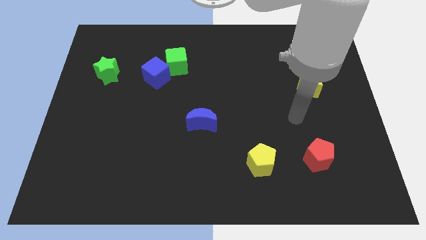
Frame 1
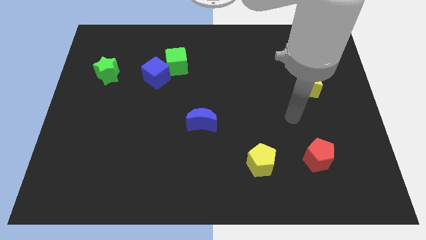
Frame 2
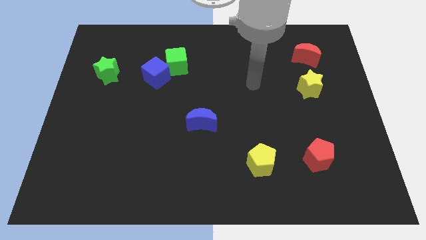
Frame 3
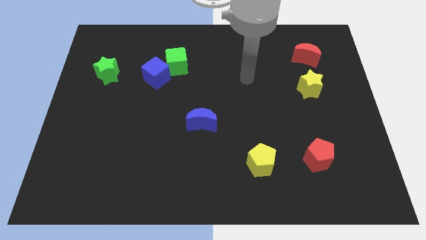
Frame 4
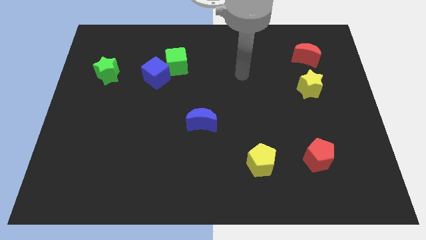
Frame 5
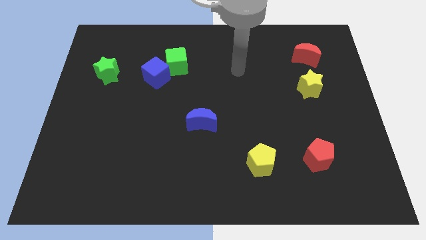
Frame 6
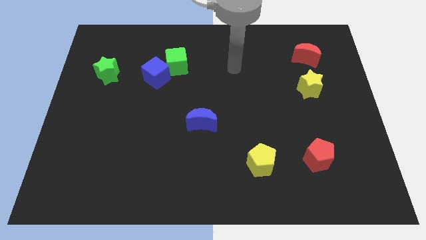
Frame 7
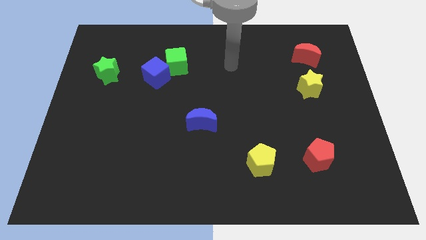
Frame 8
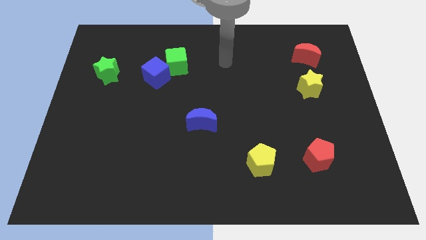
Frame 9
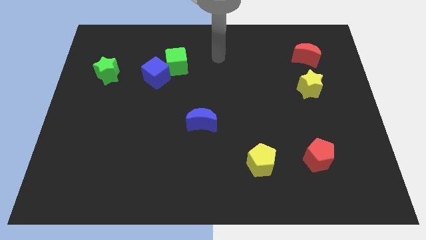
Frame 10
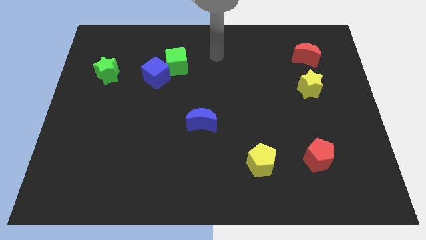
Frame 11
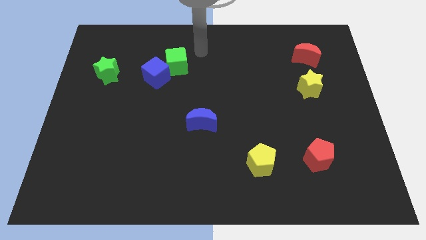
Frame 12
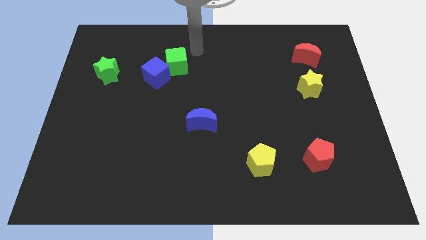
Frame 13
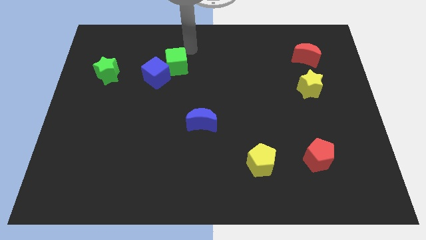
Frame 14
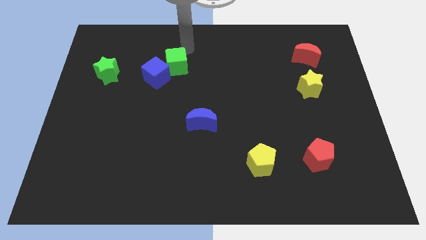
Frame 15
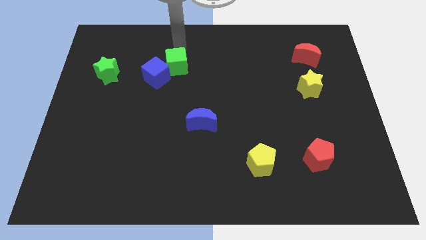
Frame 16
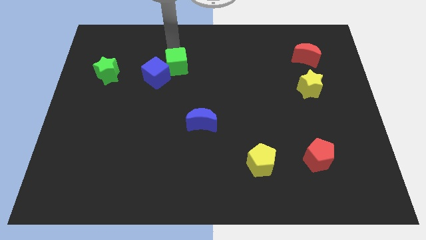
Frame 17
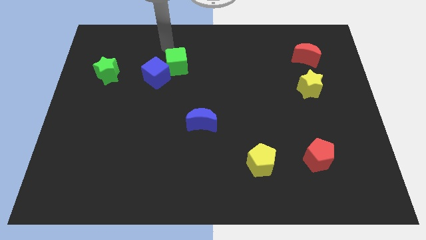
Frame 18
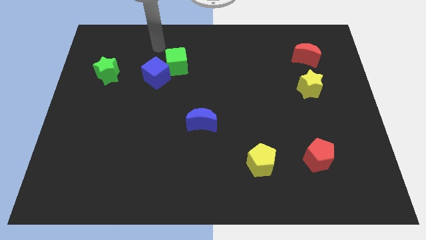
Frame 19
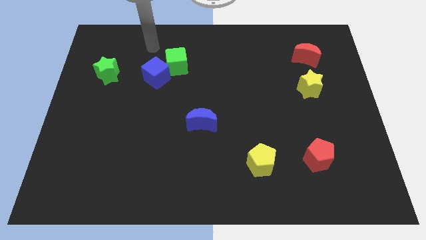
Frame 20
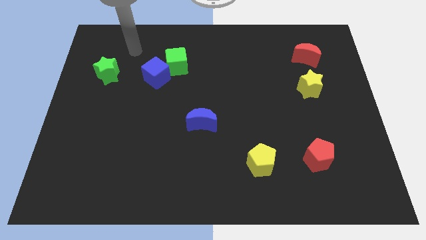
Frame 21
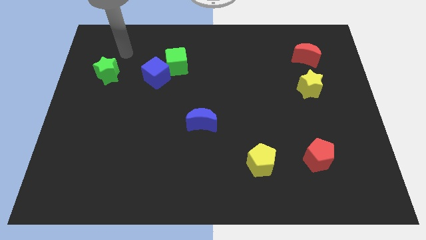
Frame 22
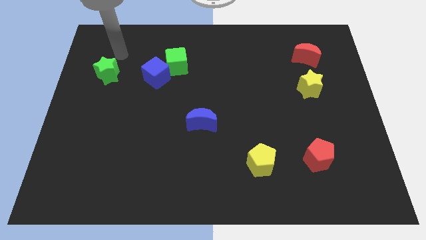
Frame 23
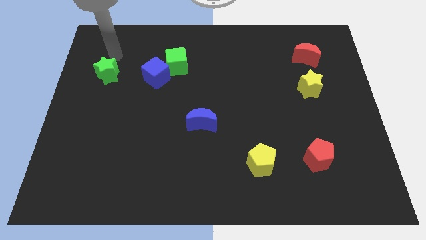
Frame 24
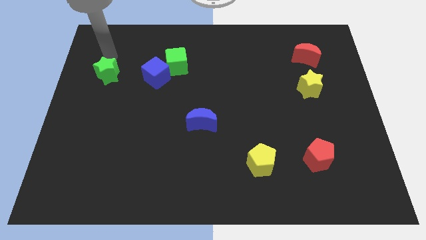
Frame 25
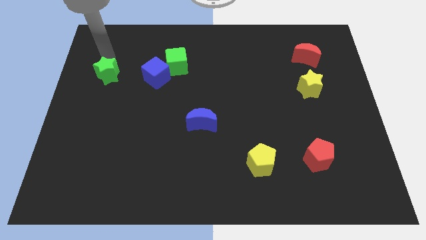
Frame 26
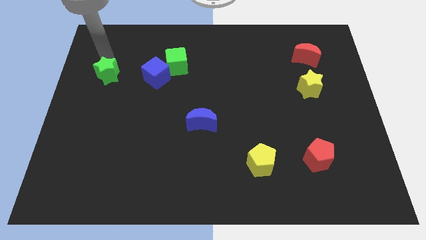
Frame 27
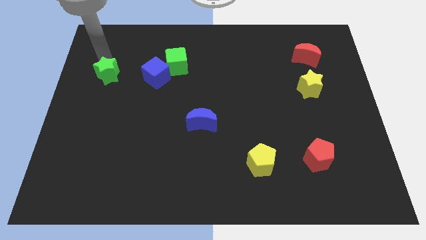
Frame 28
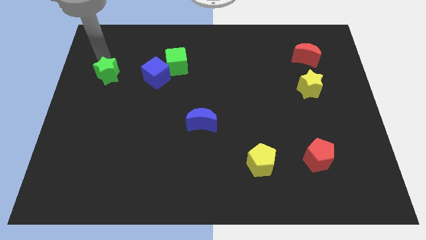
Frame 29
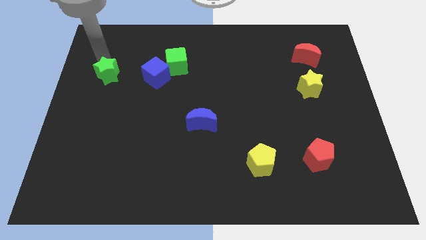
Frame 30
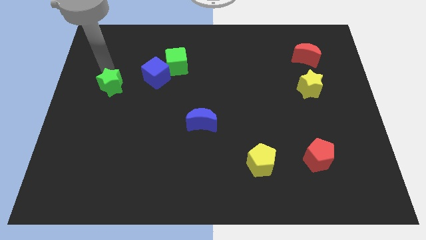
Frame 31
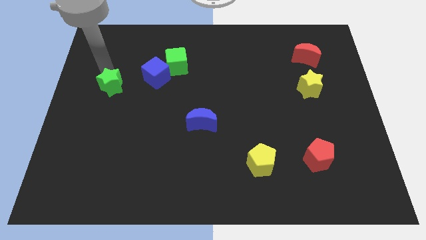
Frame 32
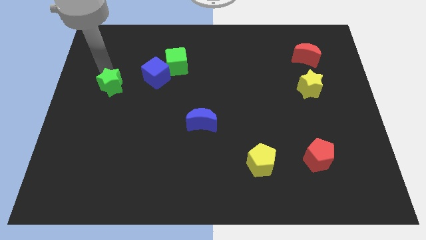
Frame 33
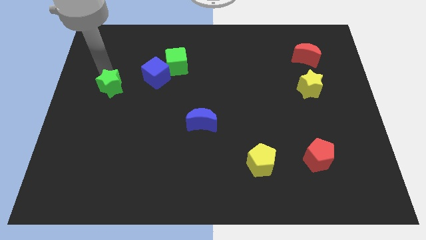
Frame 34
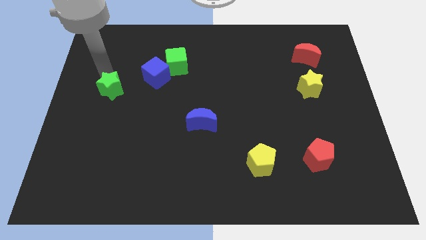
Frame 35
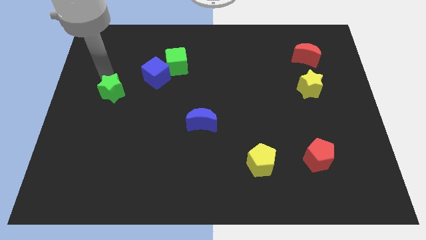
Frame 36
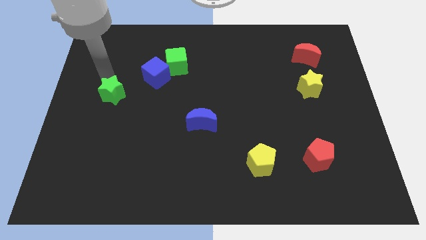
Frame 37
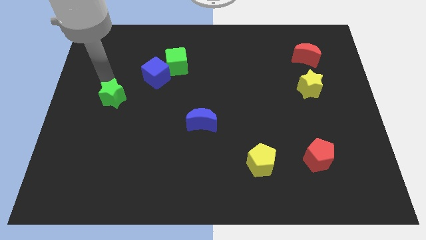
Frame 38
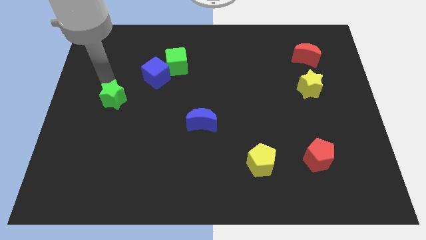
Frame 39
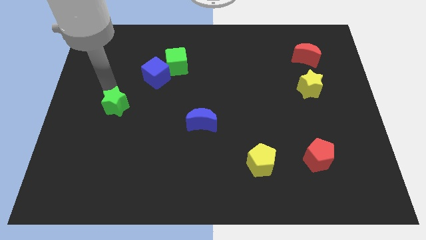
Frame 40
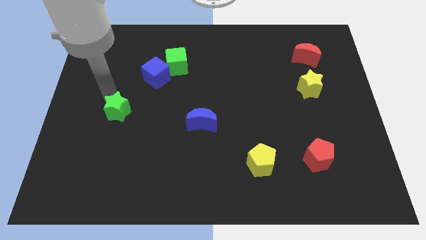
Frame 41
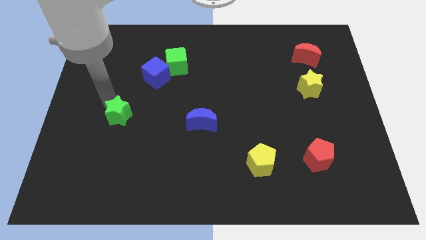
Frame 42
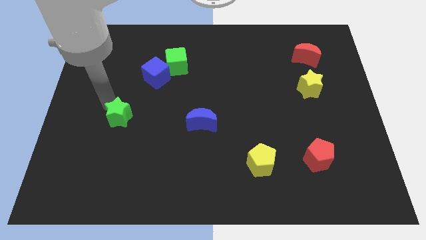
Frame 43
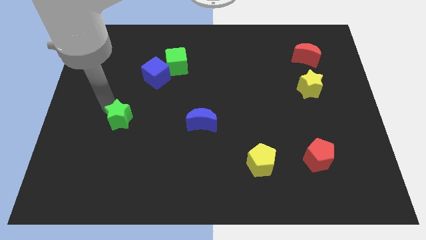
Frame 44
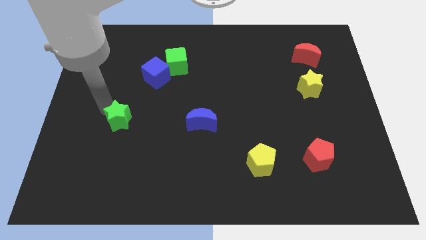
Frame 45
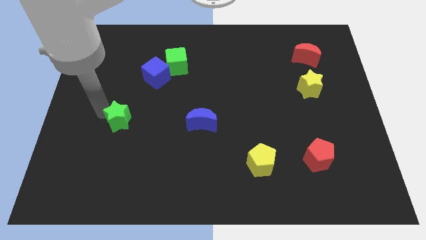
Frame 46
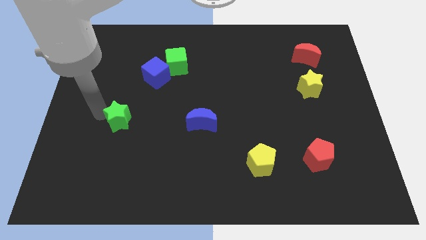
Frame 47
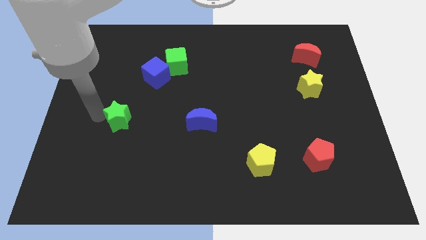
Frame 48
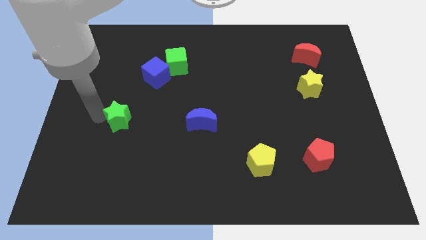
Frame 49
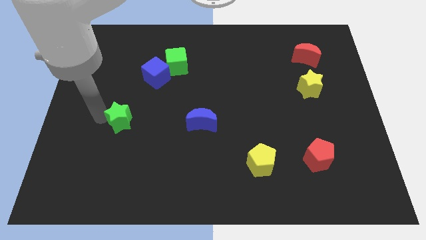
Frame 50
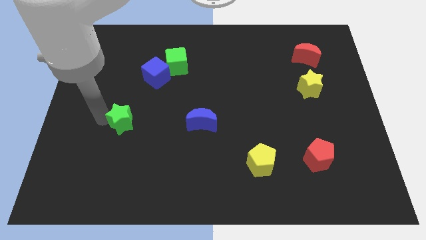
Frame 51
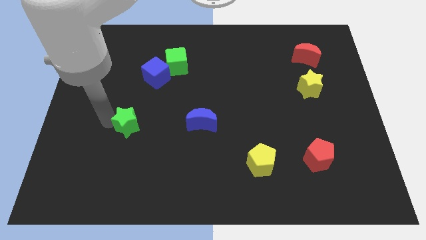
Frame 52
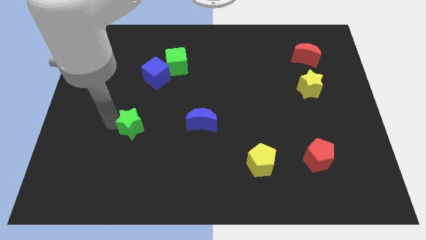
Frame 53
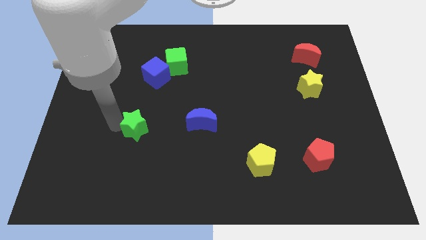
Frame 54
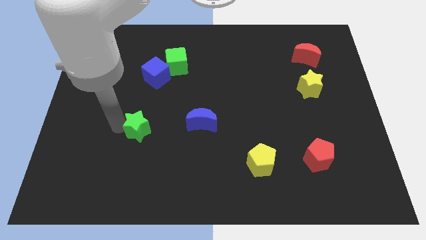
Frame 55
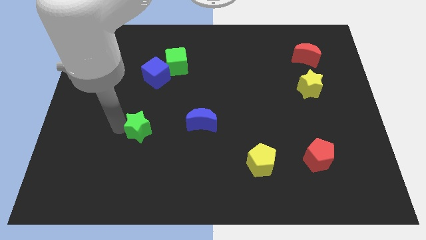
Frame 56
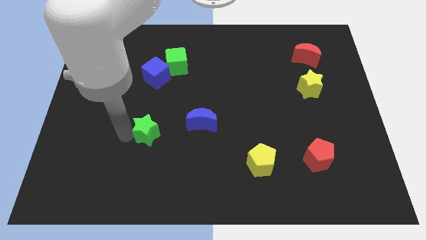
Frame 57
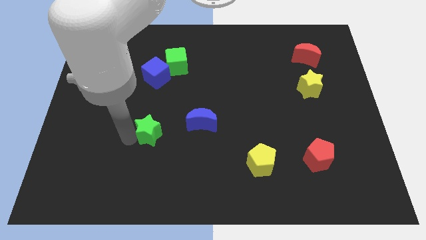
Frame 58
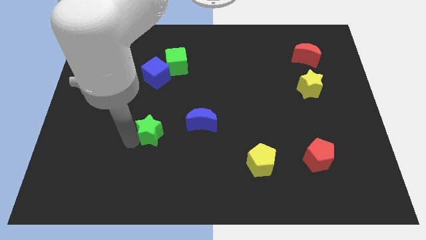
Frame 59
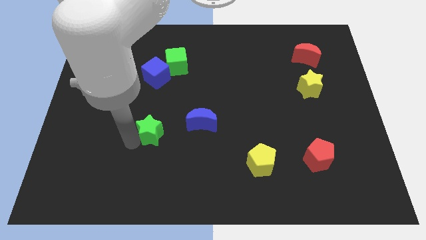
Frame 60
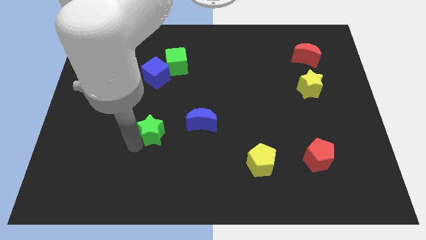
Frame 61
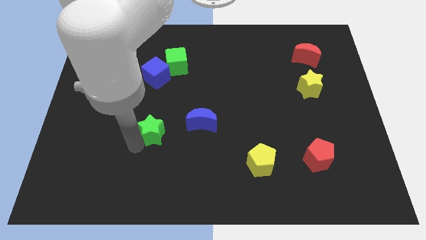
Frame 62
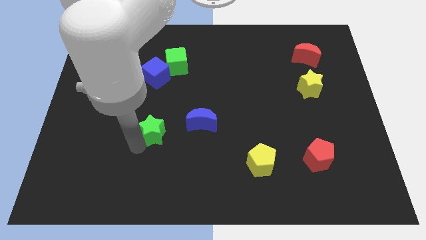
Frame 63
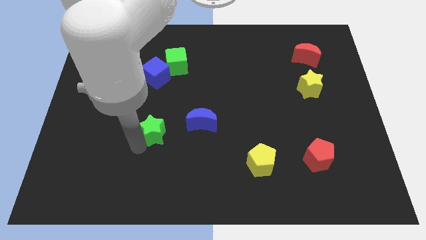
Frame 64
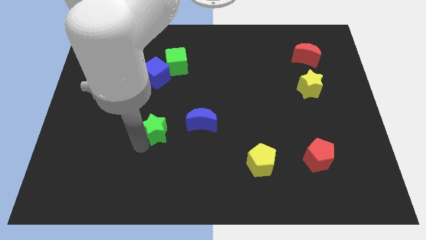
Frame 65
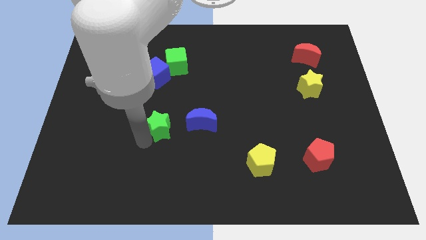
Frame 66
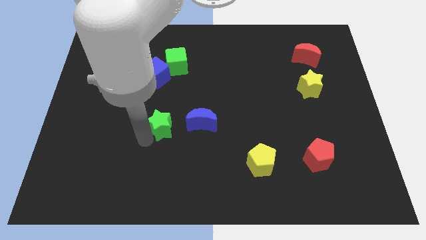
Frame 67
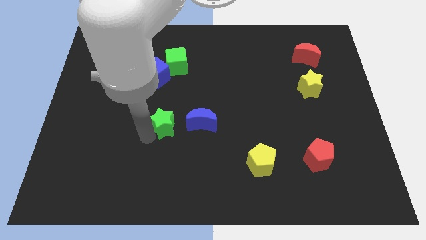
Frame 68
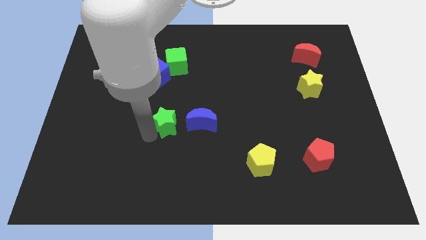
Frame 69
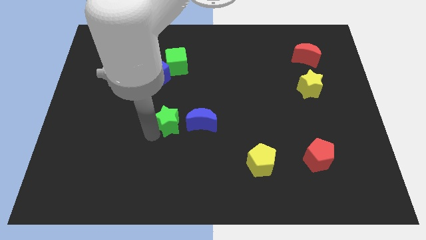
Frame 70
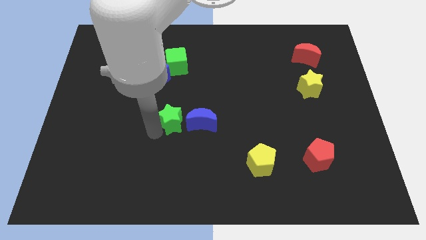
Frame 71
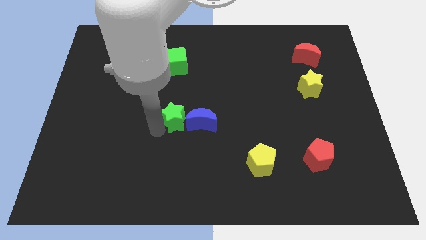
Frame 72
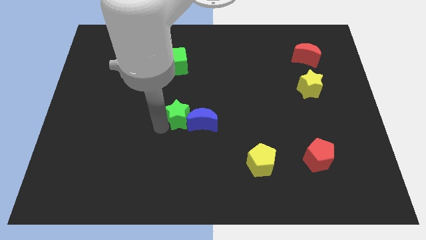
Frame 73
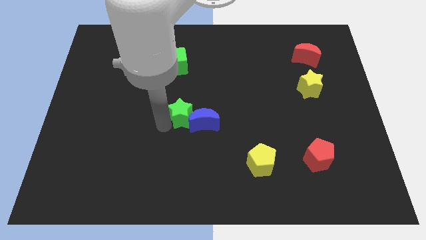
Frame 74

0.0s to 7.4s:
move the green star towards the blue moon

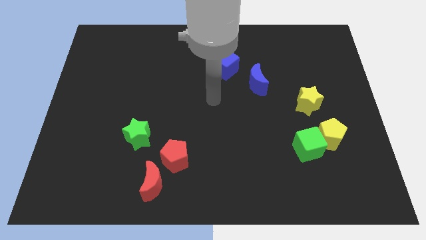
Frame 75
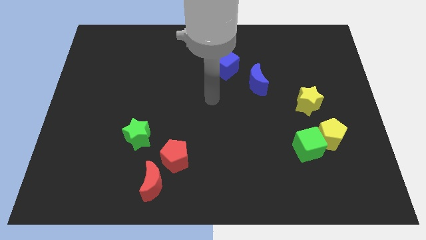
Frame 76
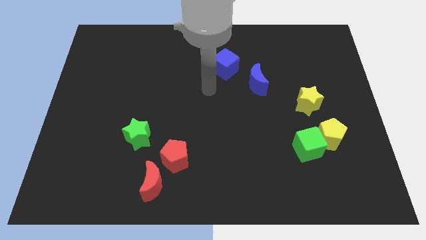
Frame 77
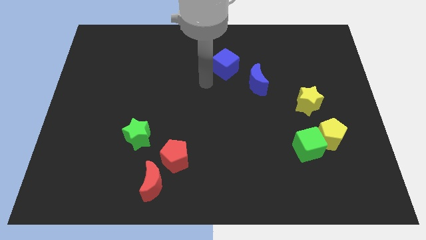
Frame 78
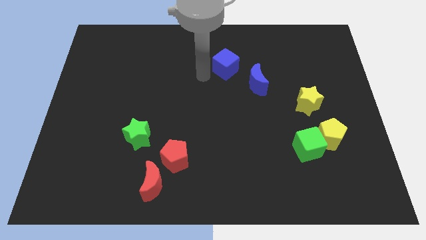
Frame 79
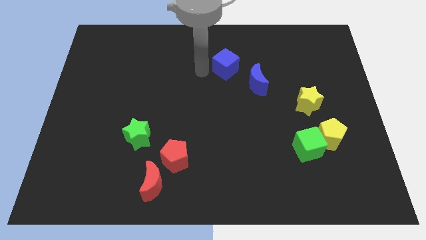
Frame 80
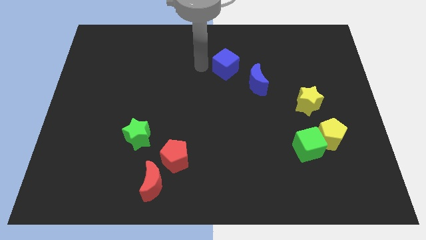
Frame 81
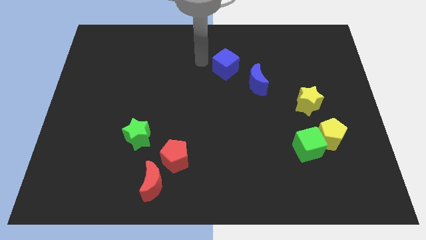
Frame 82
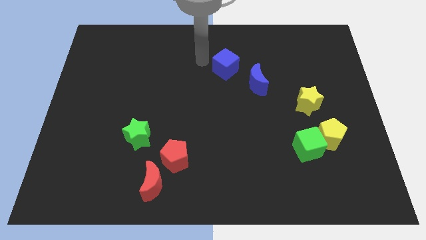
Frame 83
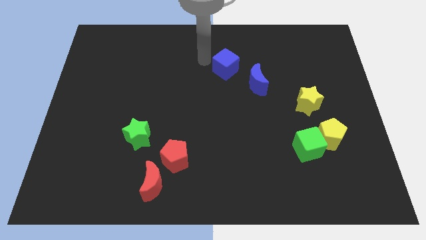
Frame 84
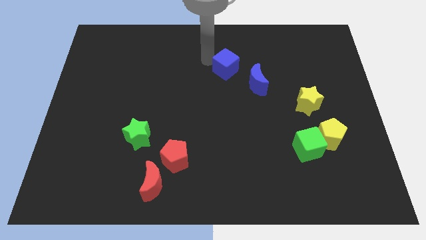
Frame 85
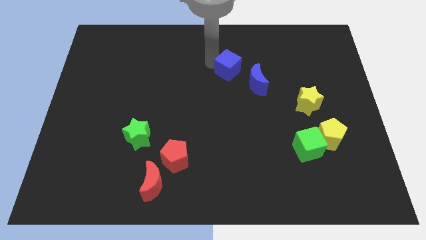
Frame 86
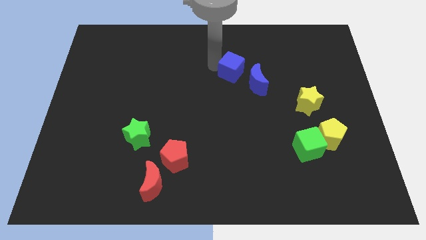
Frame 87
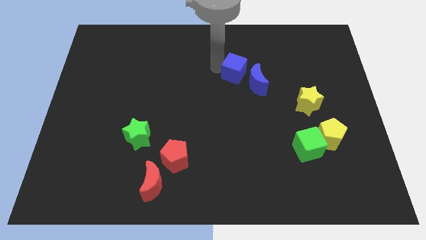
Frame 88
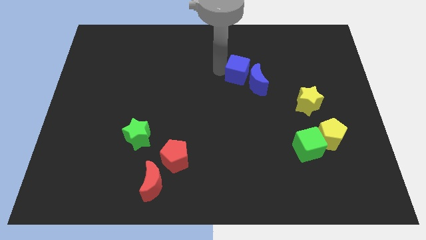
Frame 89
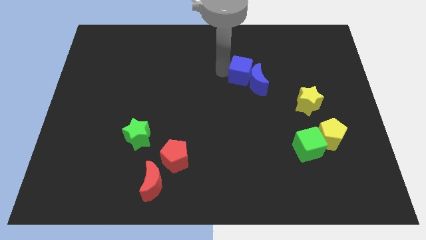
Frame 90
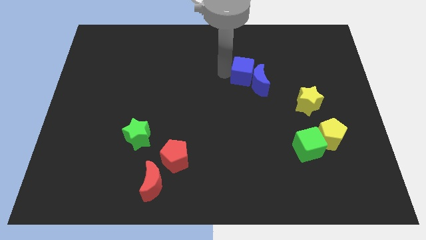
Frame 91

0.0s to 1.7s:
push the blue cube close to the blue moon
